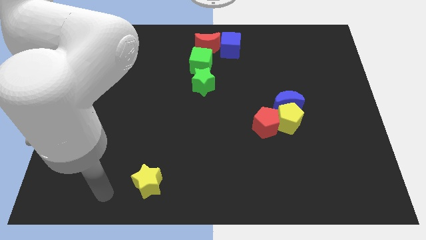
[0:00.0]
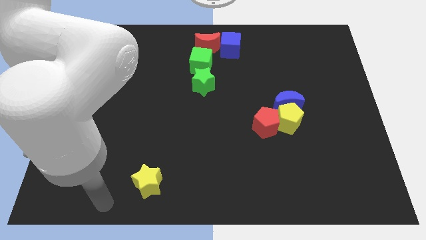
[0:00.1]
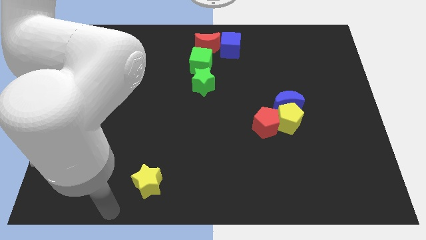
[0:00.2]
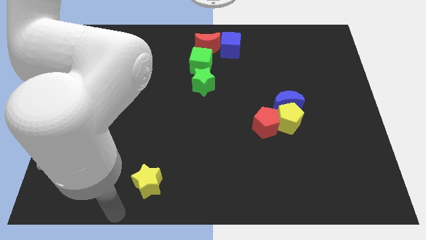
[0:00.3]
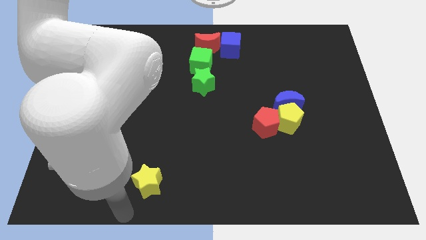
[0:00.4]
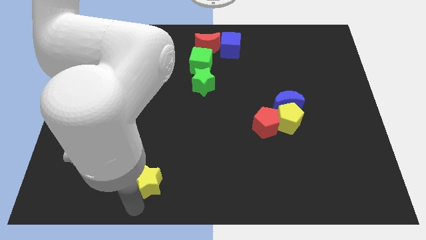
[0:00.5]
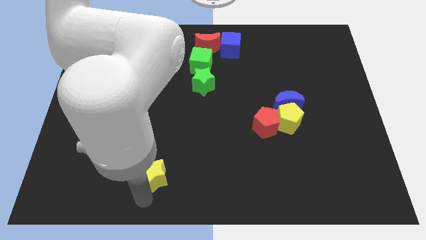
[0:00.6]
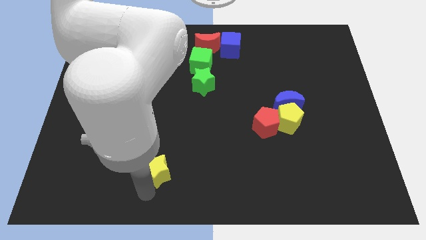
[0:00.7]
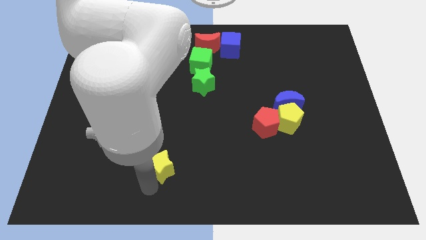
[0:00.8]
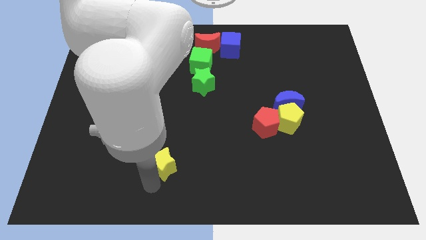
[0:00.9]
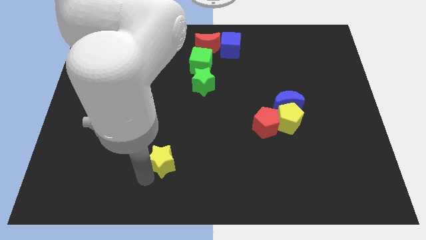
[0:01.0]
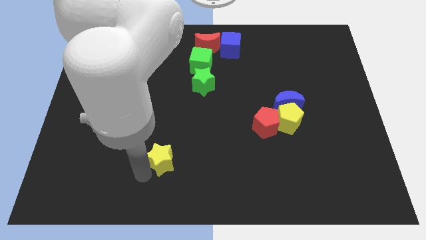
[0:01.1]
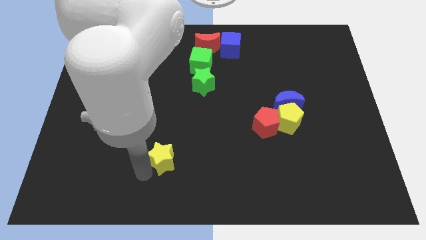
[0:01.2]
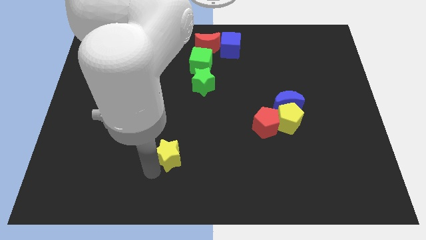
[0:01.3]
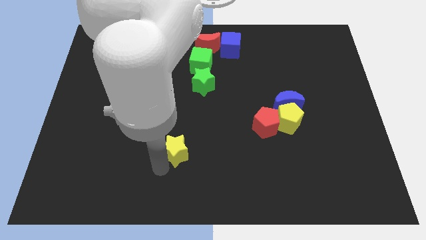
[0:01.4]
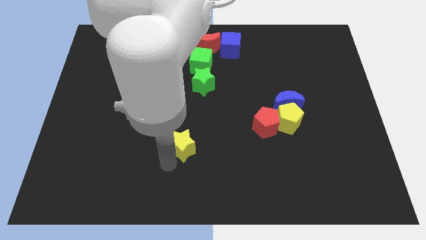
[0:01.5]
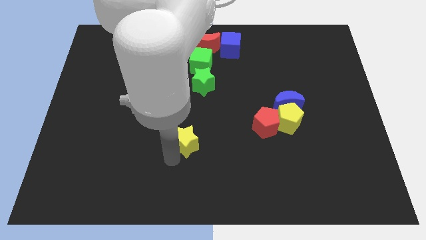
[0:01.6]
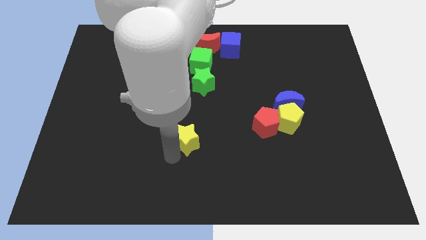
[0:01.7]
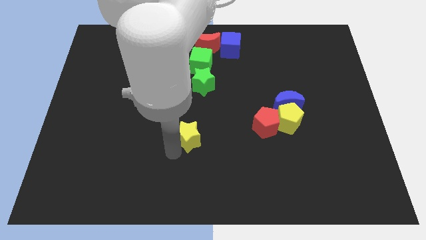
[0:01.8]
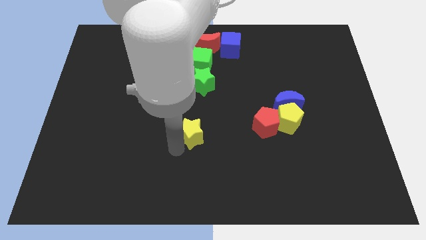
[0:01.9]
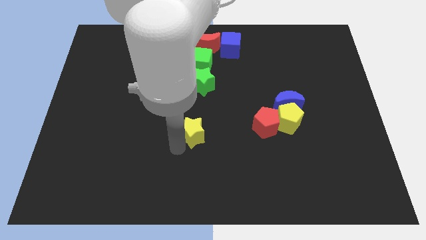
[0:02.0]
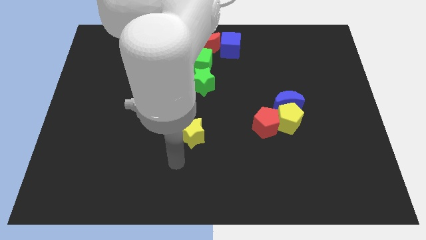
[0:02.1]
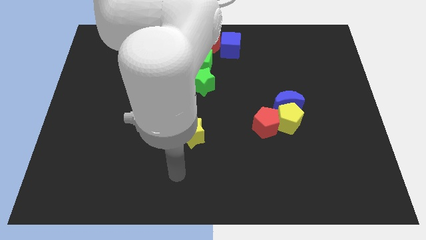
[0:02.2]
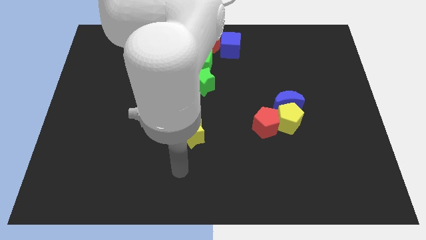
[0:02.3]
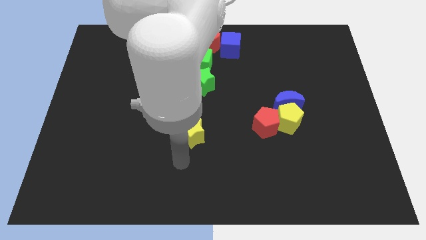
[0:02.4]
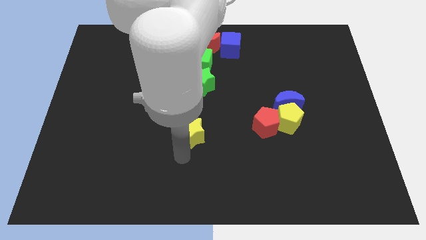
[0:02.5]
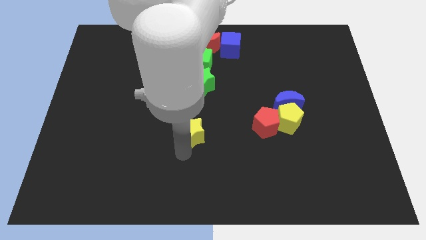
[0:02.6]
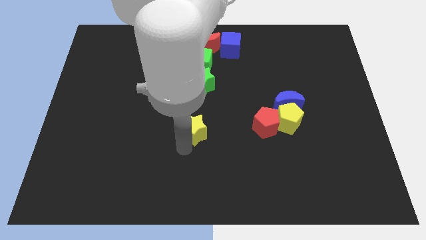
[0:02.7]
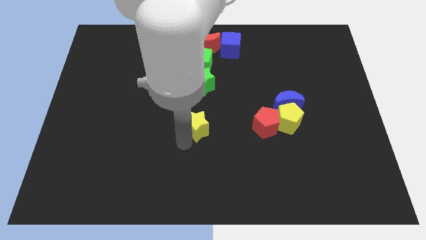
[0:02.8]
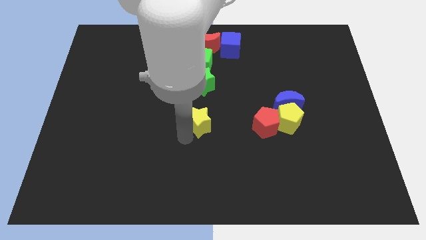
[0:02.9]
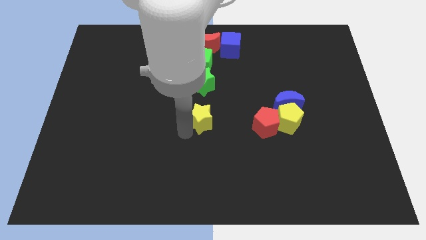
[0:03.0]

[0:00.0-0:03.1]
place yellow star parallel to red pentagon

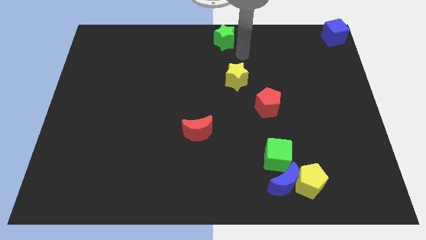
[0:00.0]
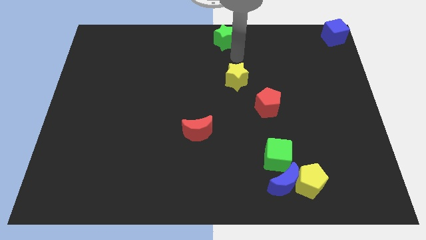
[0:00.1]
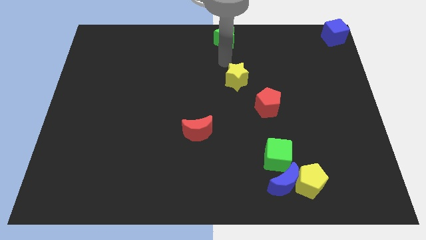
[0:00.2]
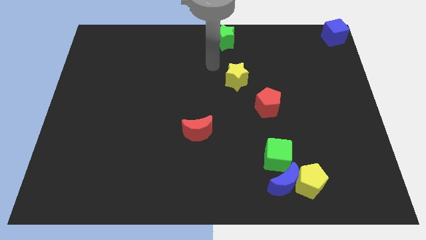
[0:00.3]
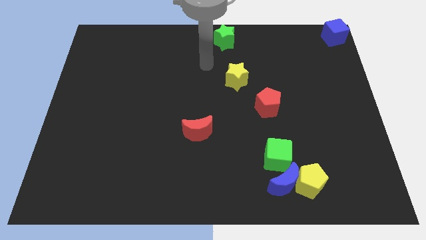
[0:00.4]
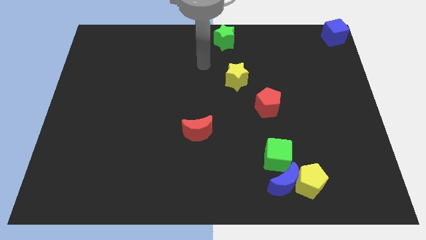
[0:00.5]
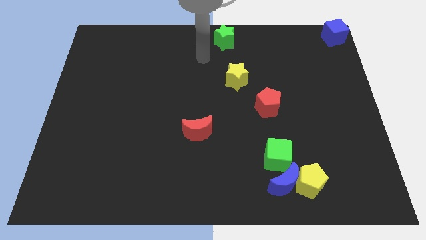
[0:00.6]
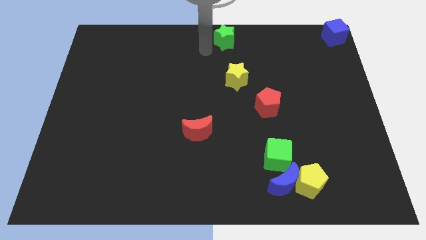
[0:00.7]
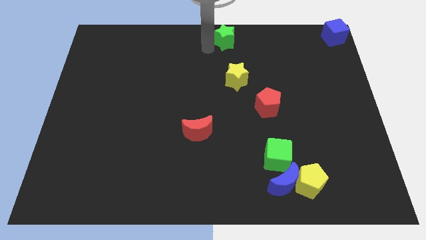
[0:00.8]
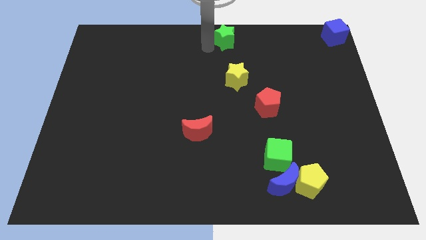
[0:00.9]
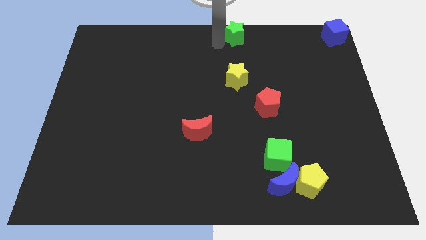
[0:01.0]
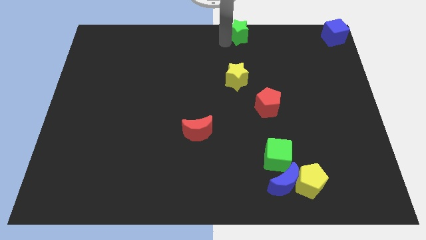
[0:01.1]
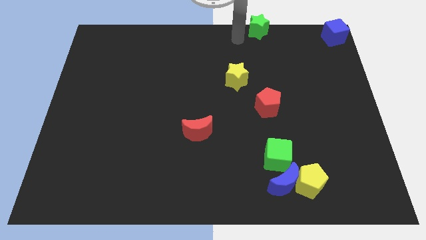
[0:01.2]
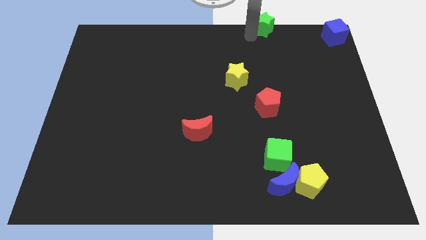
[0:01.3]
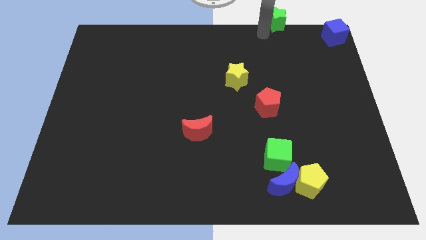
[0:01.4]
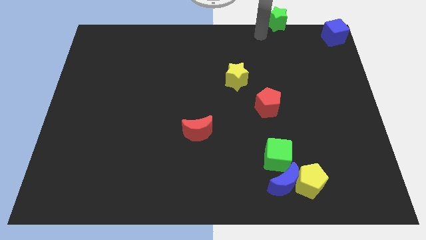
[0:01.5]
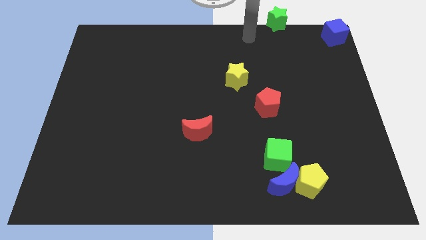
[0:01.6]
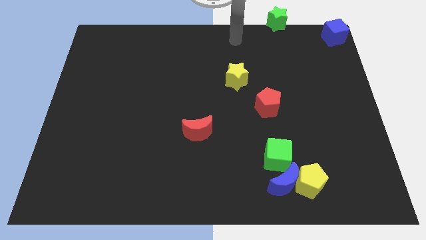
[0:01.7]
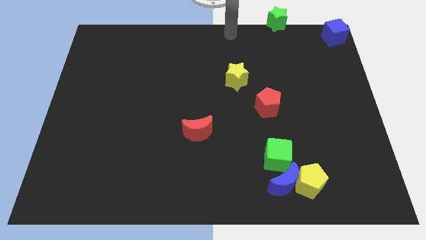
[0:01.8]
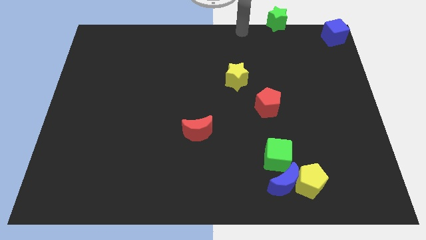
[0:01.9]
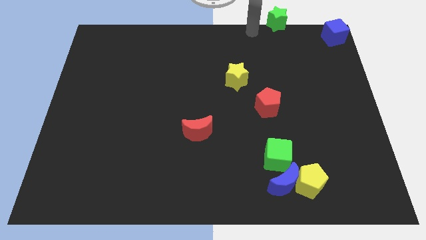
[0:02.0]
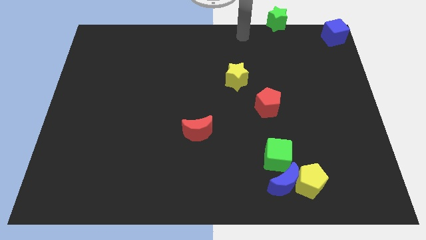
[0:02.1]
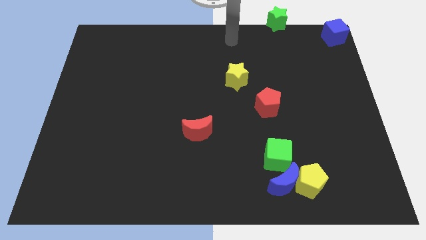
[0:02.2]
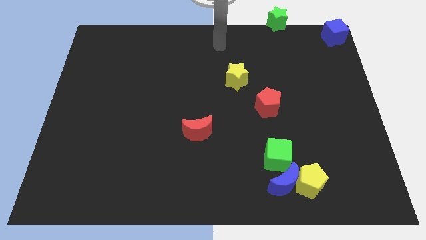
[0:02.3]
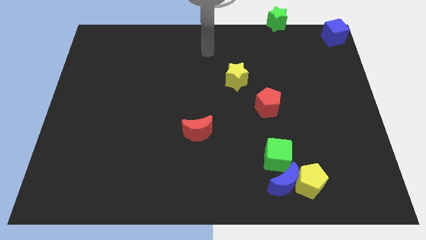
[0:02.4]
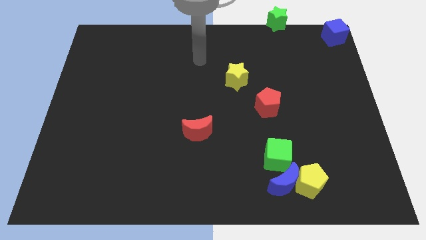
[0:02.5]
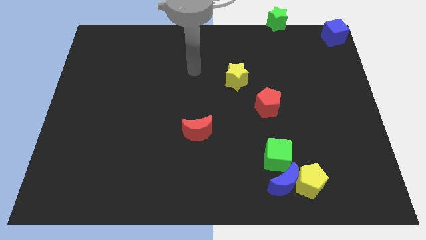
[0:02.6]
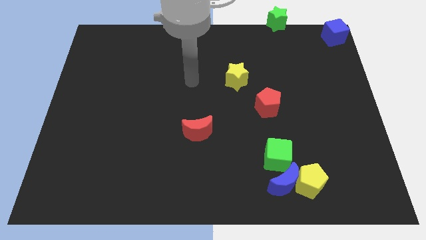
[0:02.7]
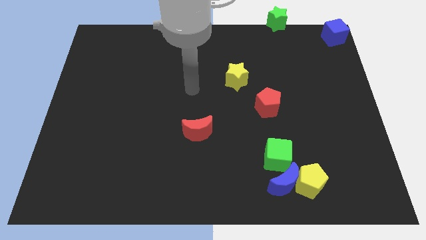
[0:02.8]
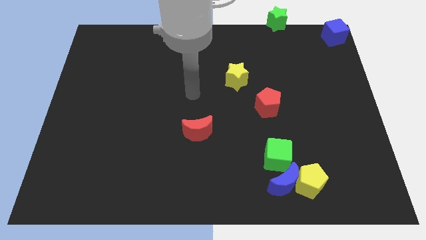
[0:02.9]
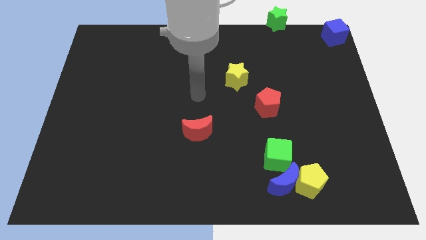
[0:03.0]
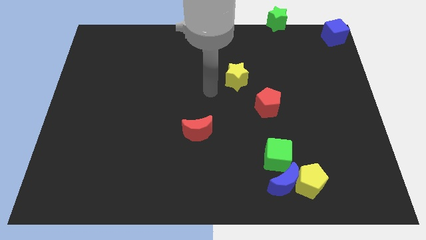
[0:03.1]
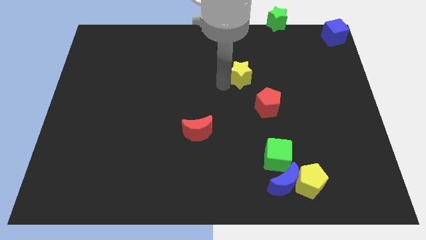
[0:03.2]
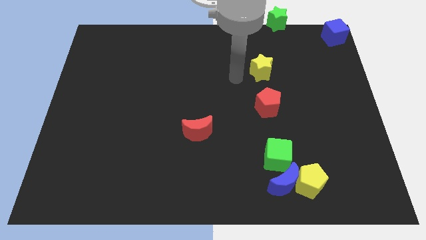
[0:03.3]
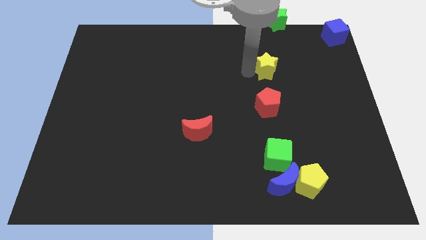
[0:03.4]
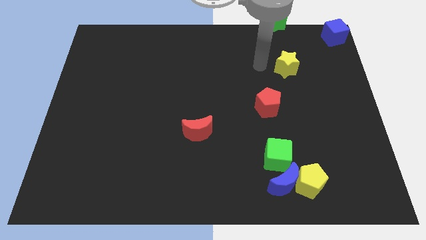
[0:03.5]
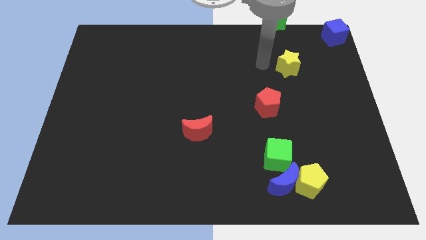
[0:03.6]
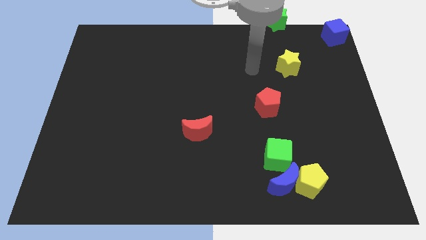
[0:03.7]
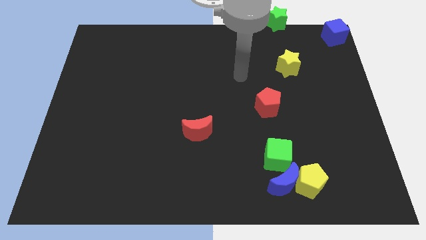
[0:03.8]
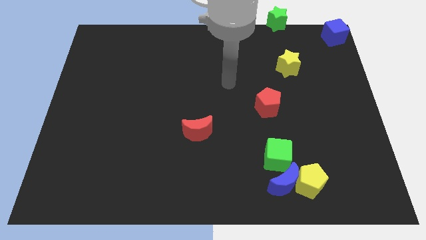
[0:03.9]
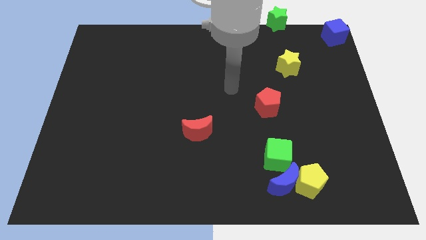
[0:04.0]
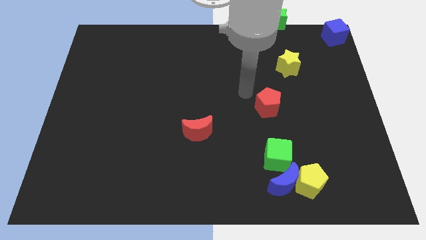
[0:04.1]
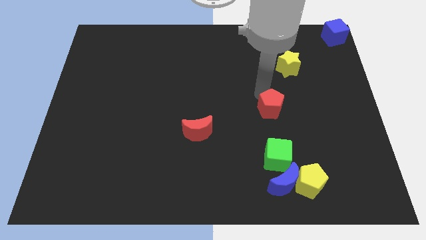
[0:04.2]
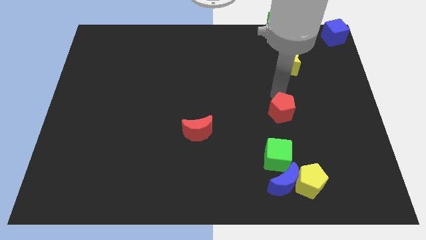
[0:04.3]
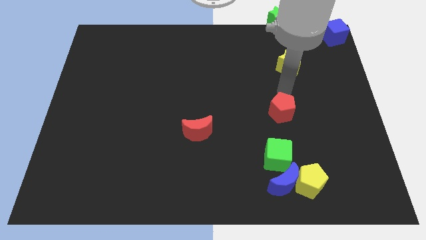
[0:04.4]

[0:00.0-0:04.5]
place green star yellow star and red pentagon in a vertical line

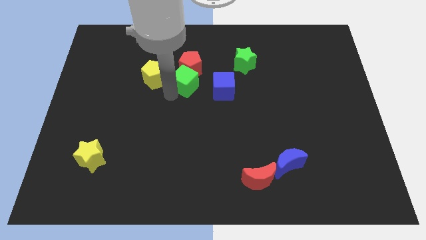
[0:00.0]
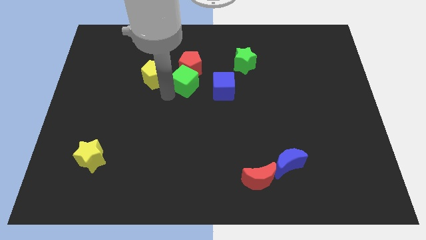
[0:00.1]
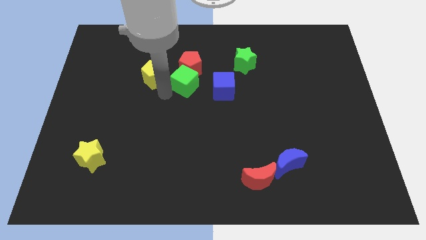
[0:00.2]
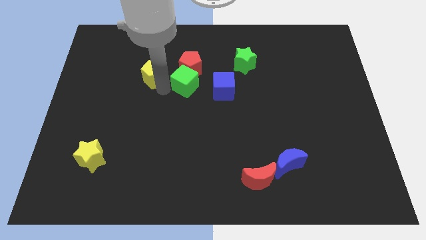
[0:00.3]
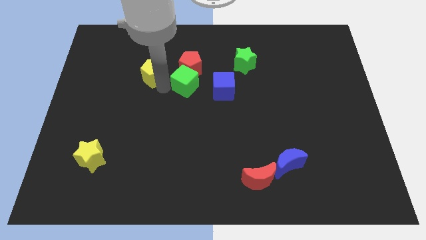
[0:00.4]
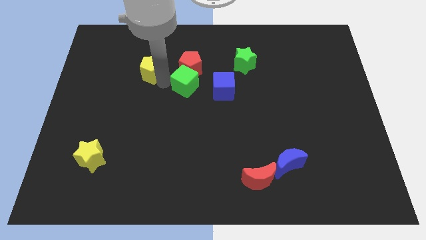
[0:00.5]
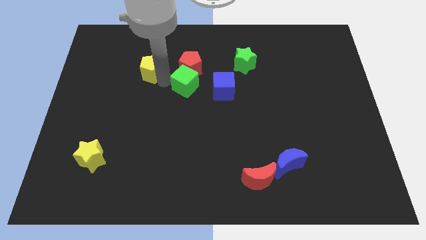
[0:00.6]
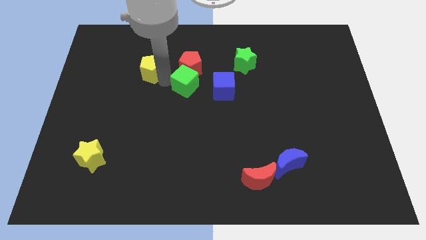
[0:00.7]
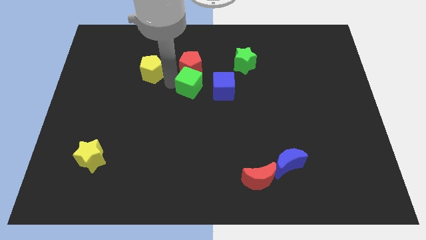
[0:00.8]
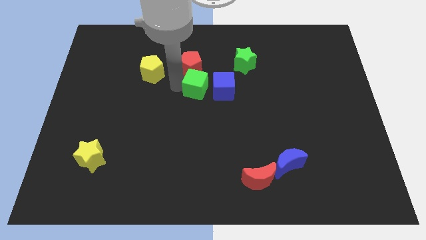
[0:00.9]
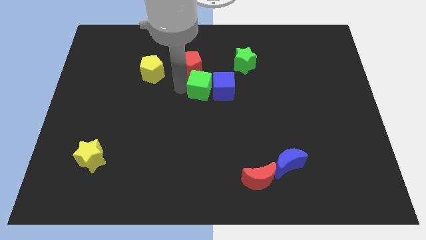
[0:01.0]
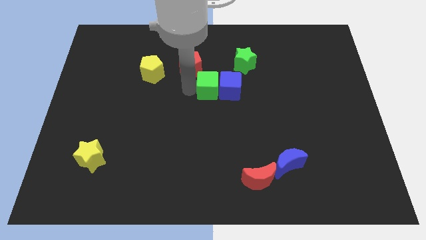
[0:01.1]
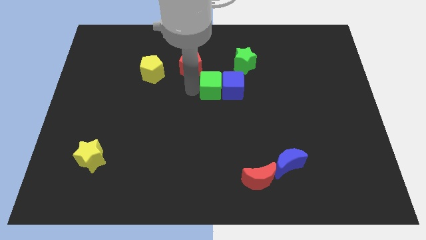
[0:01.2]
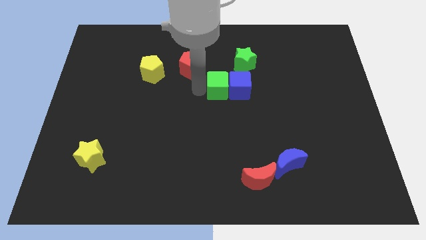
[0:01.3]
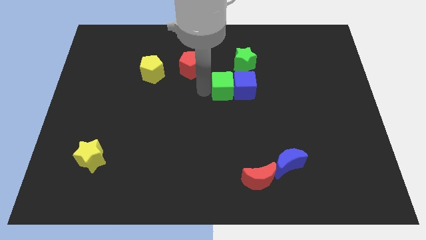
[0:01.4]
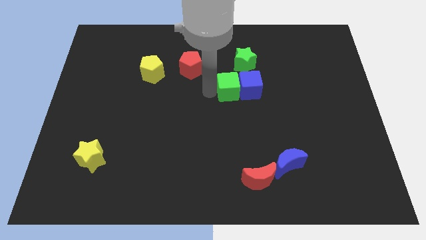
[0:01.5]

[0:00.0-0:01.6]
push the green cube into the blue cube
